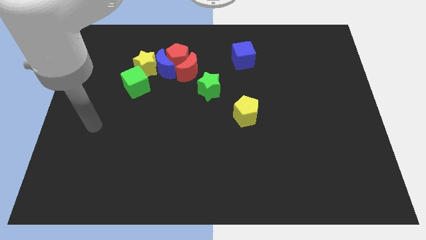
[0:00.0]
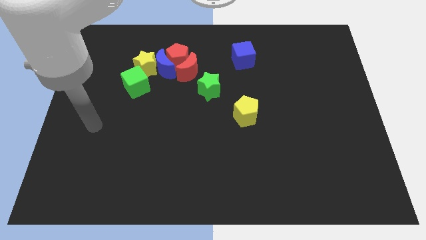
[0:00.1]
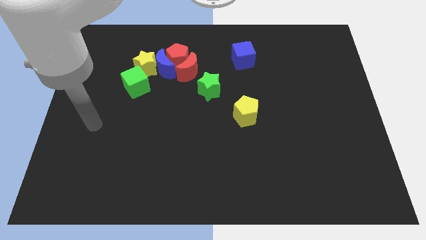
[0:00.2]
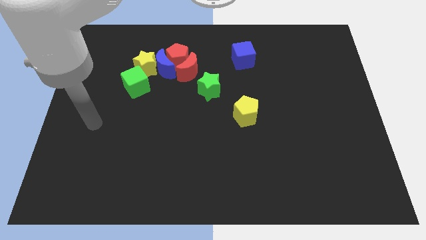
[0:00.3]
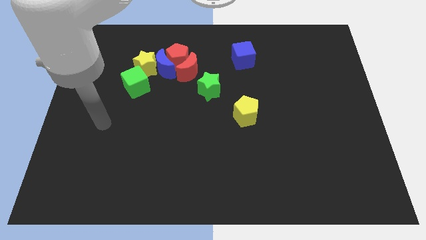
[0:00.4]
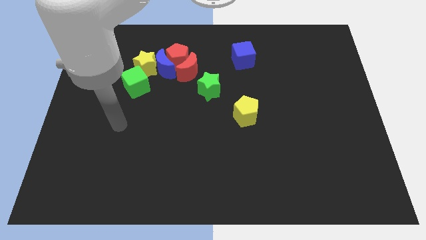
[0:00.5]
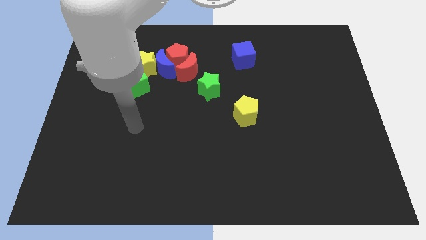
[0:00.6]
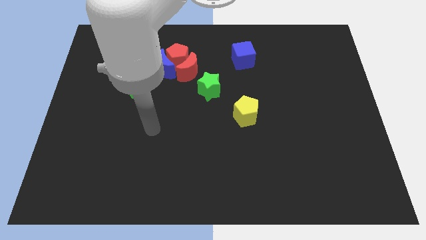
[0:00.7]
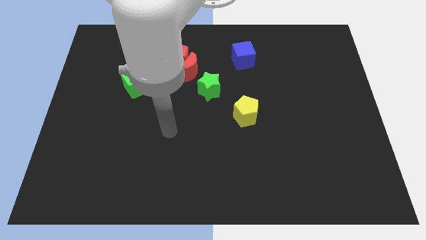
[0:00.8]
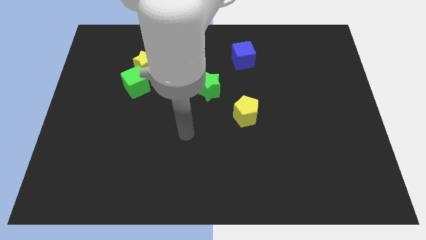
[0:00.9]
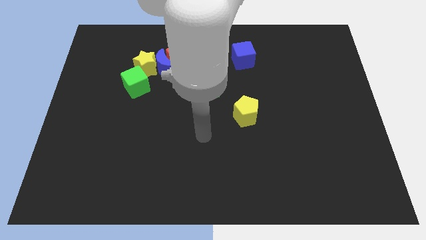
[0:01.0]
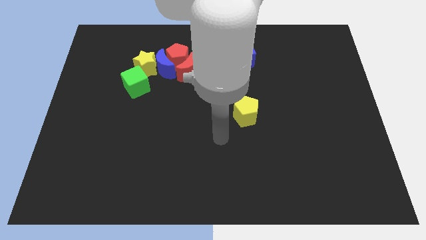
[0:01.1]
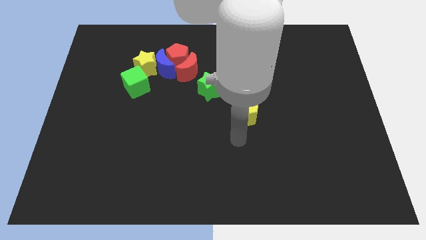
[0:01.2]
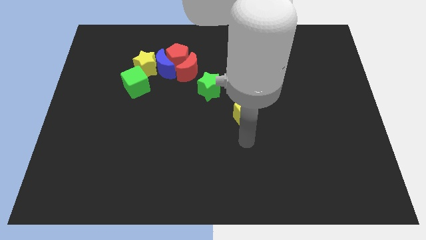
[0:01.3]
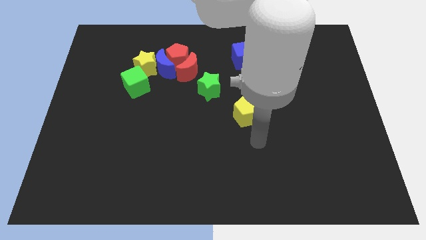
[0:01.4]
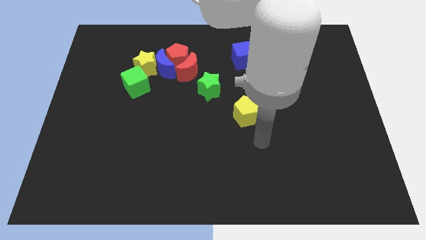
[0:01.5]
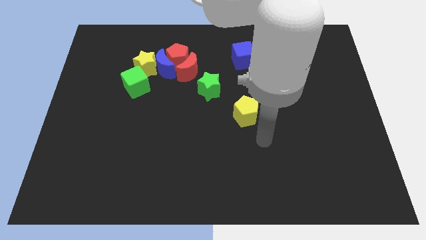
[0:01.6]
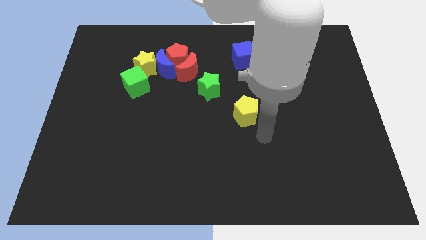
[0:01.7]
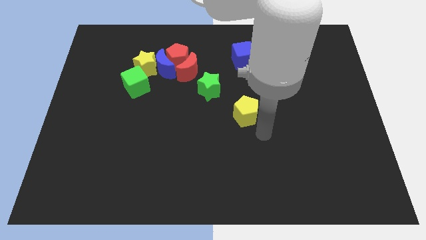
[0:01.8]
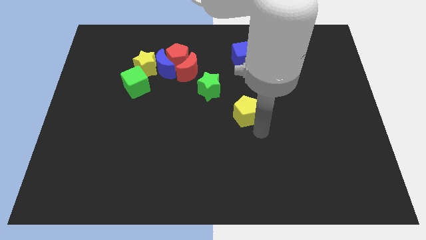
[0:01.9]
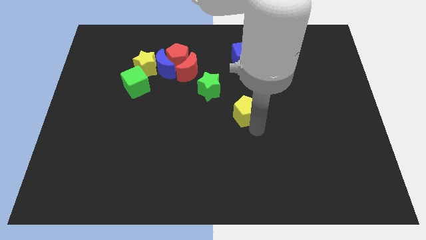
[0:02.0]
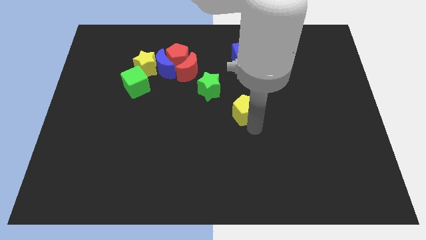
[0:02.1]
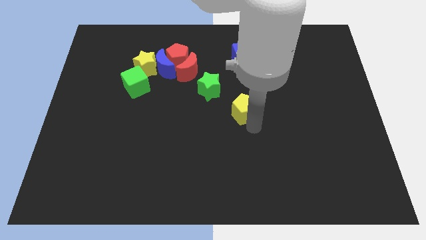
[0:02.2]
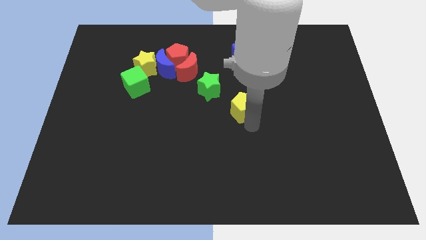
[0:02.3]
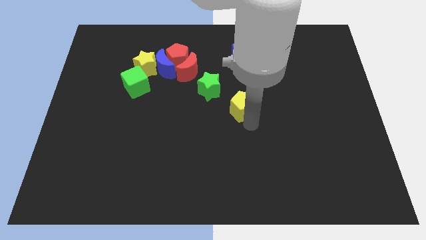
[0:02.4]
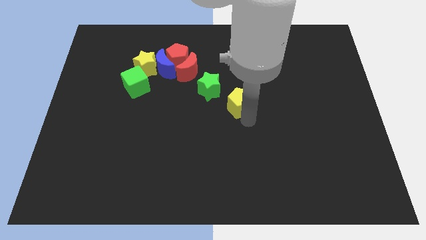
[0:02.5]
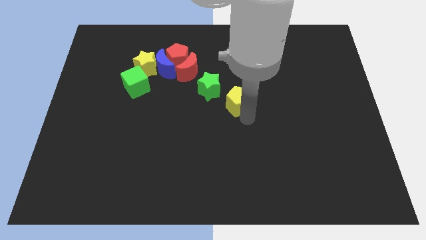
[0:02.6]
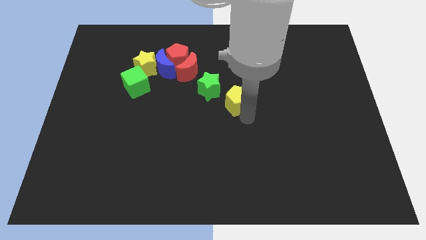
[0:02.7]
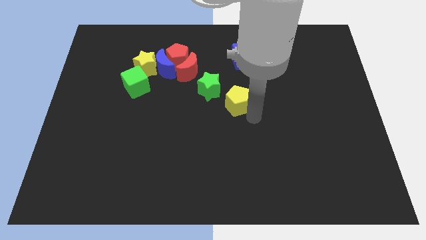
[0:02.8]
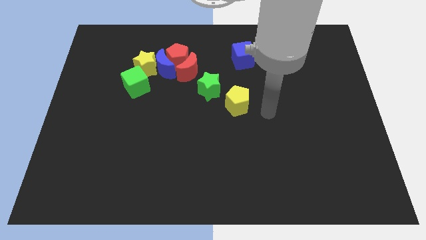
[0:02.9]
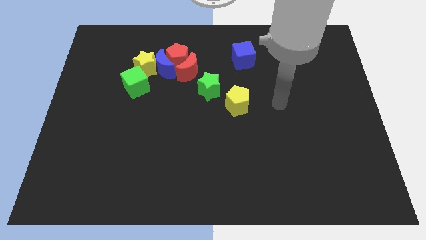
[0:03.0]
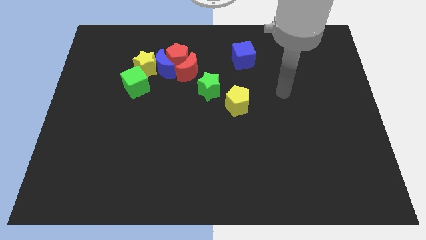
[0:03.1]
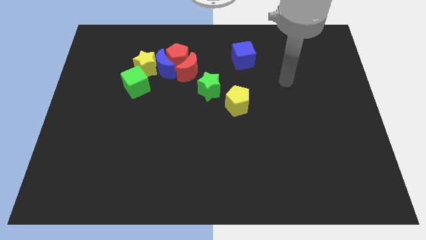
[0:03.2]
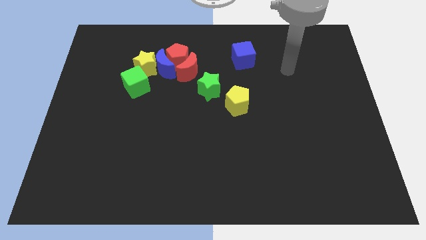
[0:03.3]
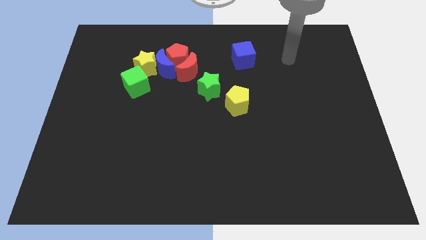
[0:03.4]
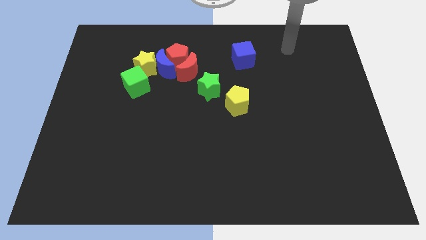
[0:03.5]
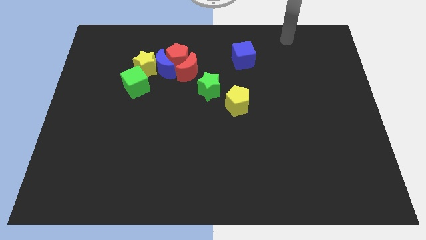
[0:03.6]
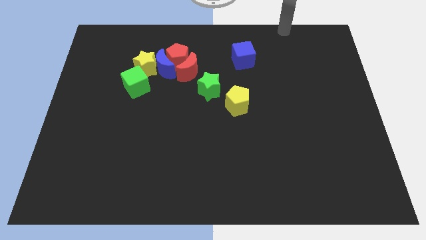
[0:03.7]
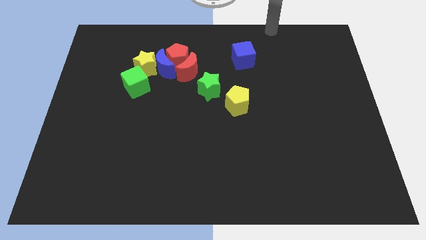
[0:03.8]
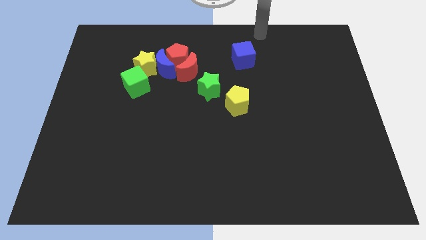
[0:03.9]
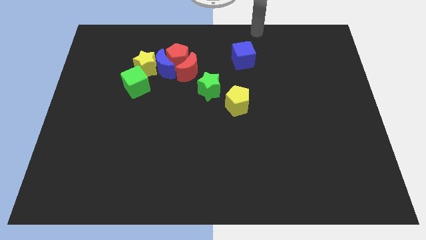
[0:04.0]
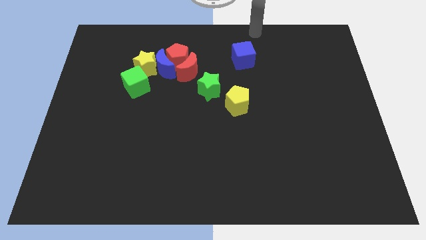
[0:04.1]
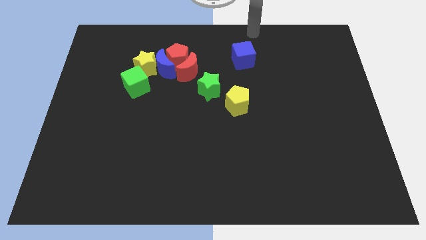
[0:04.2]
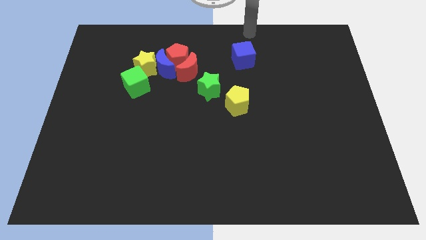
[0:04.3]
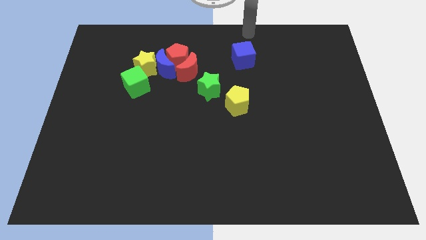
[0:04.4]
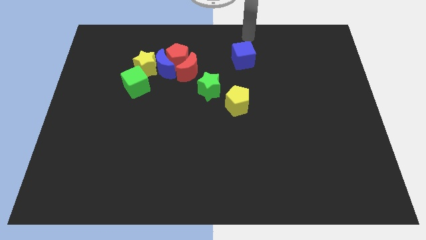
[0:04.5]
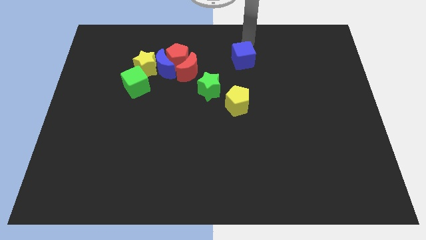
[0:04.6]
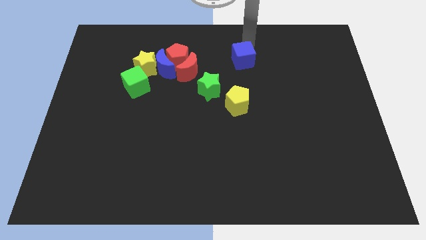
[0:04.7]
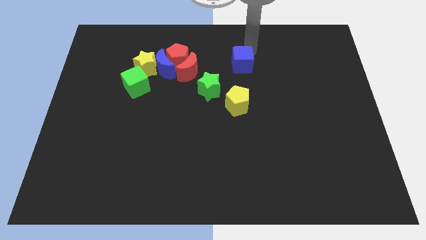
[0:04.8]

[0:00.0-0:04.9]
move your arm close to the blue cube

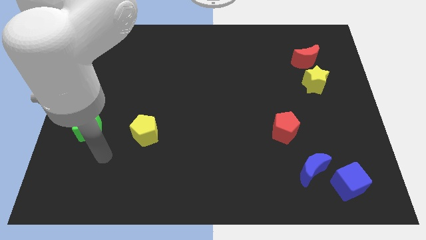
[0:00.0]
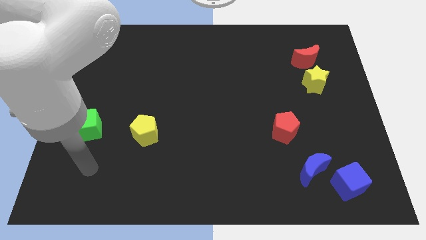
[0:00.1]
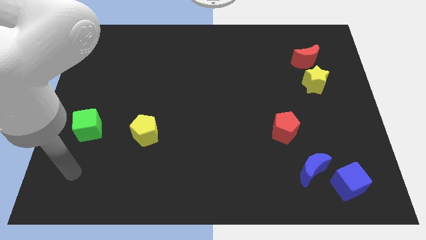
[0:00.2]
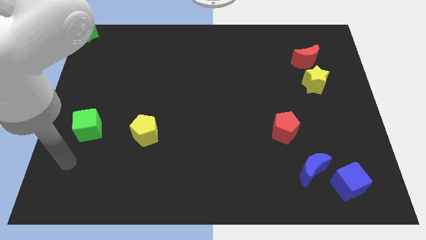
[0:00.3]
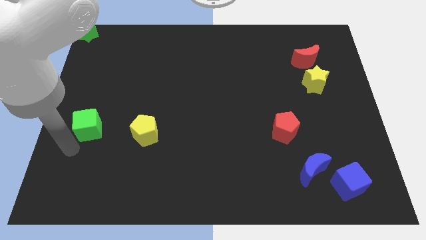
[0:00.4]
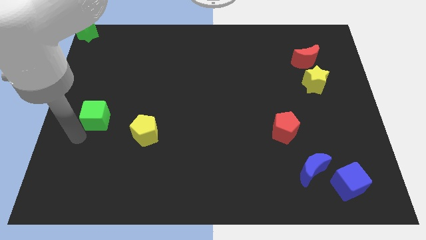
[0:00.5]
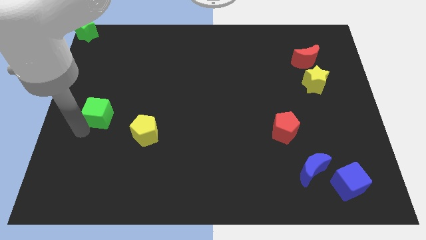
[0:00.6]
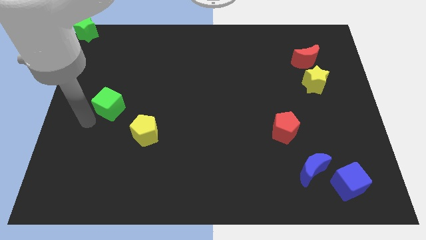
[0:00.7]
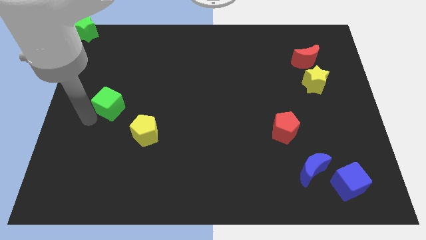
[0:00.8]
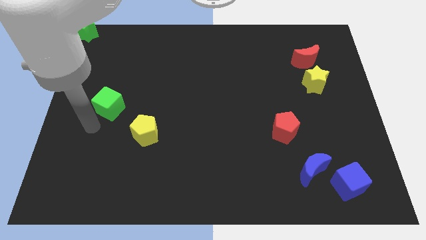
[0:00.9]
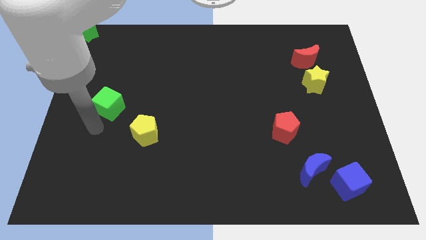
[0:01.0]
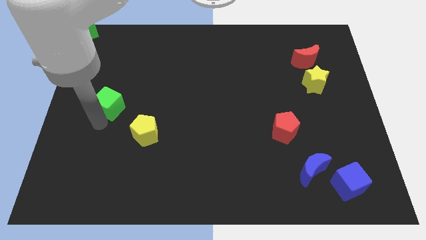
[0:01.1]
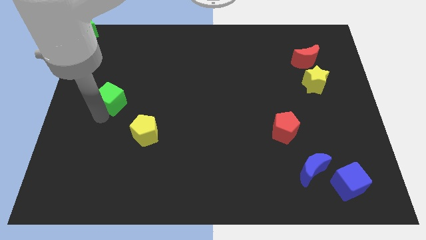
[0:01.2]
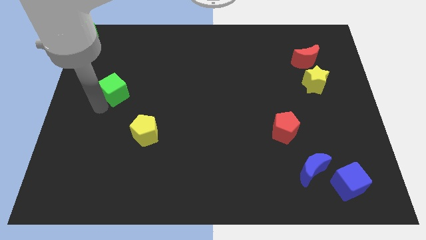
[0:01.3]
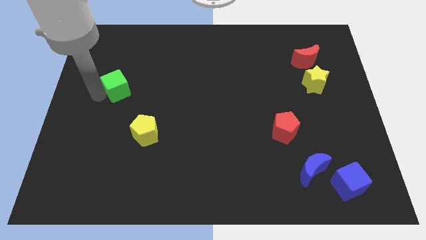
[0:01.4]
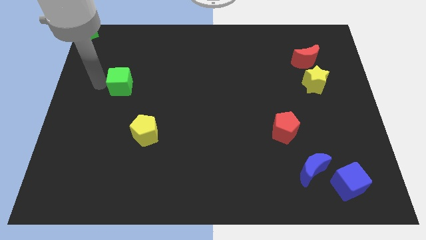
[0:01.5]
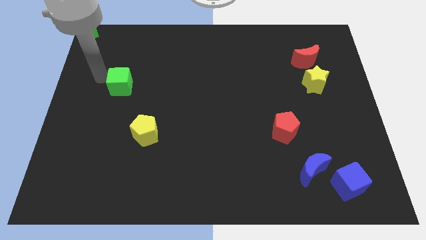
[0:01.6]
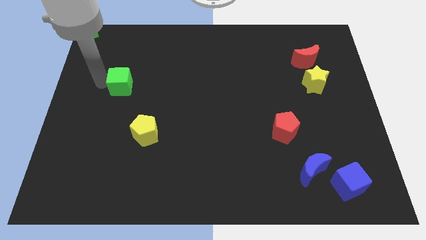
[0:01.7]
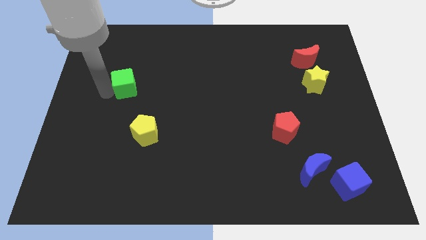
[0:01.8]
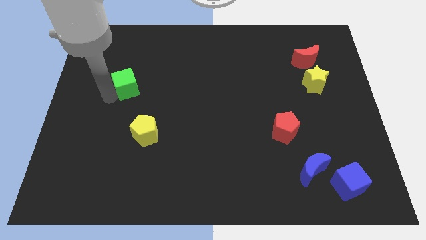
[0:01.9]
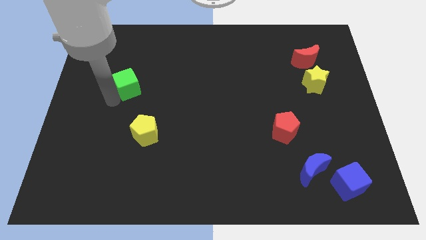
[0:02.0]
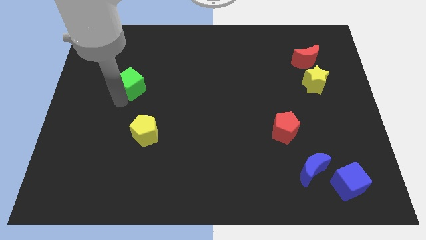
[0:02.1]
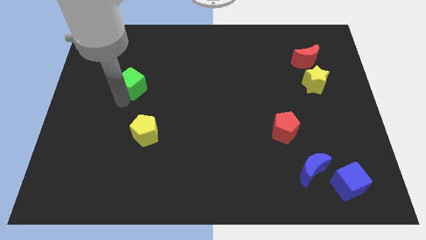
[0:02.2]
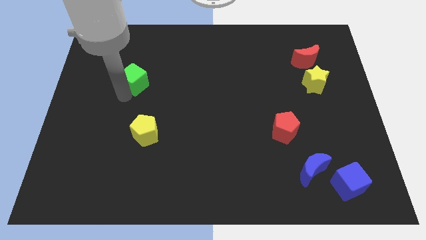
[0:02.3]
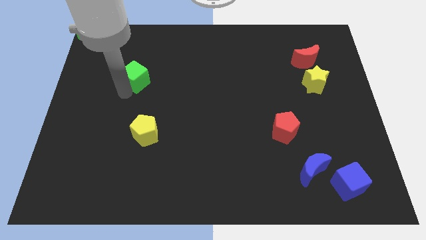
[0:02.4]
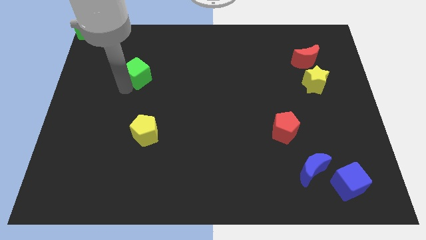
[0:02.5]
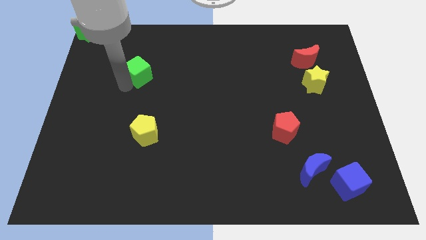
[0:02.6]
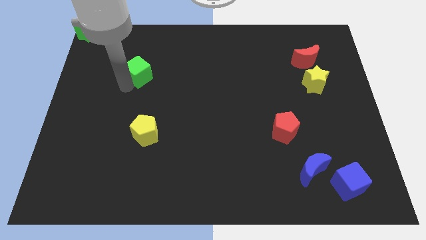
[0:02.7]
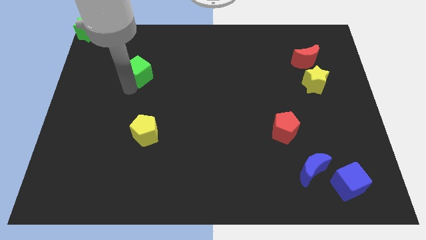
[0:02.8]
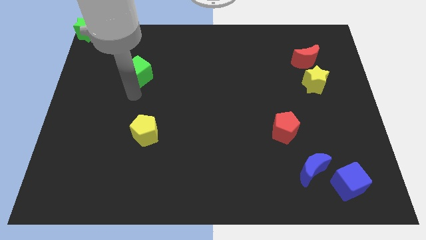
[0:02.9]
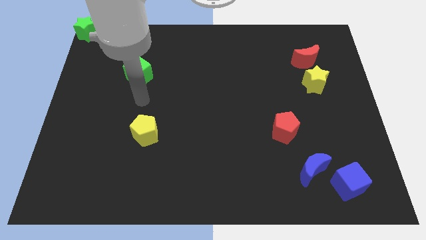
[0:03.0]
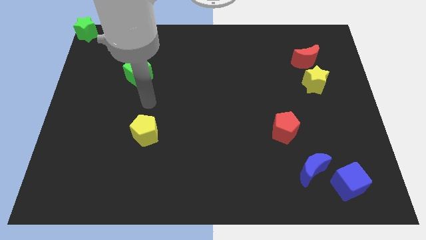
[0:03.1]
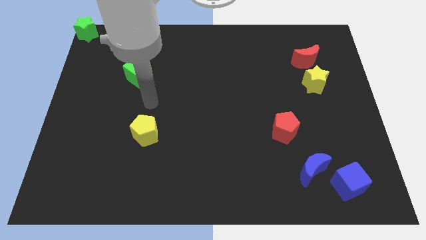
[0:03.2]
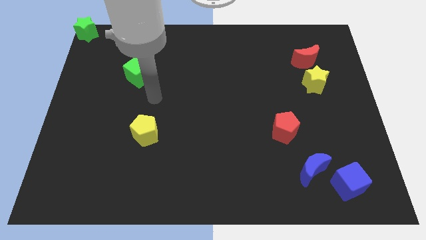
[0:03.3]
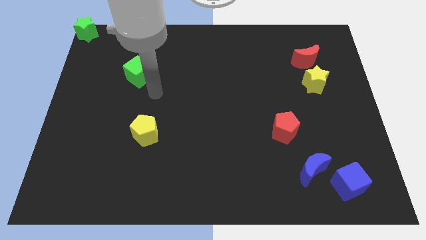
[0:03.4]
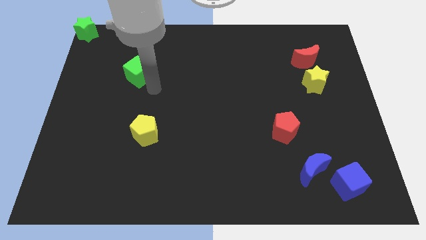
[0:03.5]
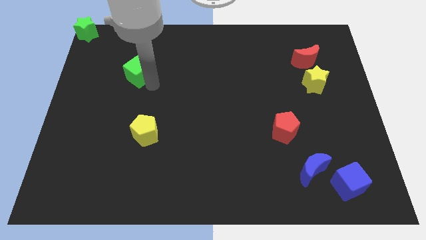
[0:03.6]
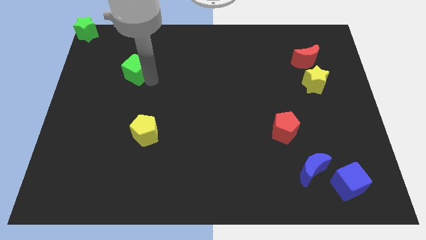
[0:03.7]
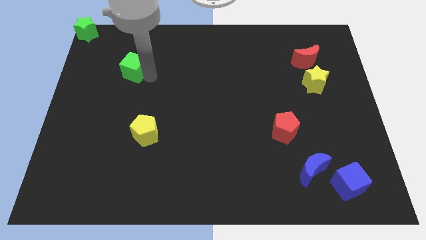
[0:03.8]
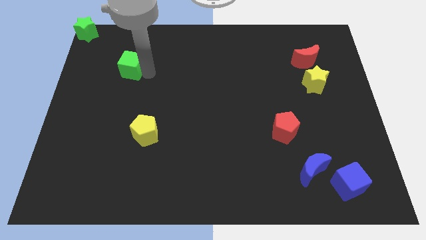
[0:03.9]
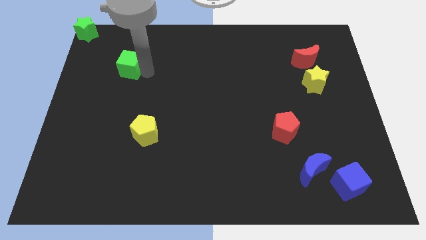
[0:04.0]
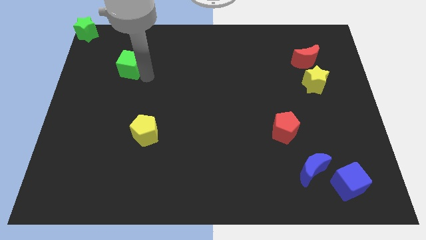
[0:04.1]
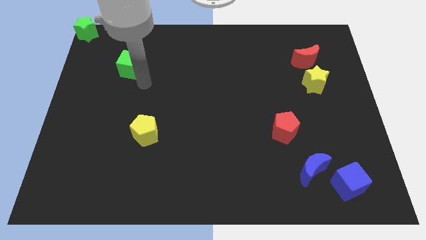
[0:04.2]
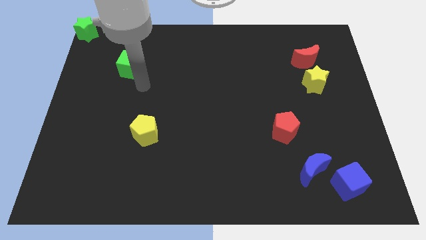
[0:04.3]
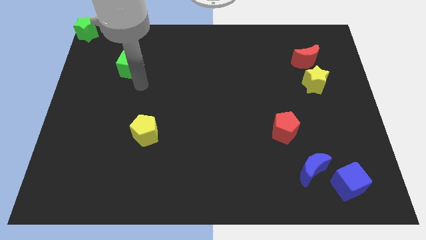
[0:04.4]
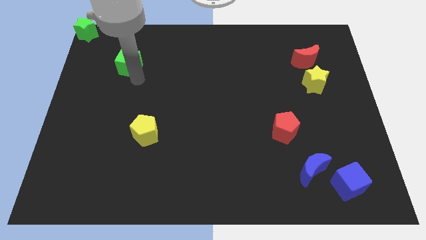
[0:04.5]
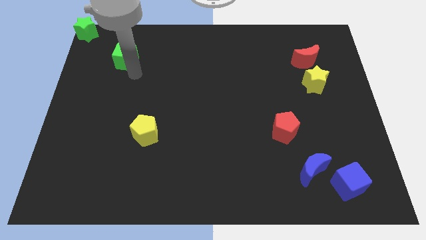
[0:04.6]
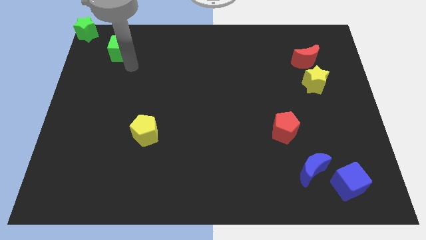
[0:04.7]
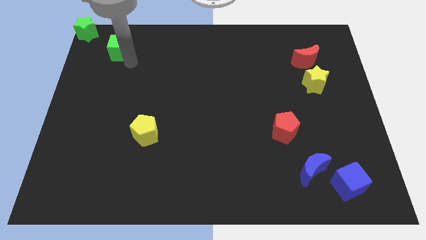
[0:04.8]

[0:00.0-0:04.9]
slide the green cube diagonally top left to the yellow pentagon
